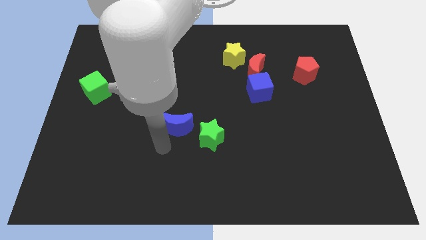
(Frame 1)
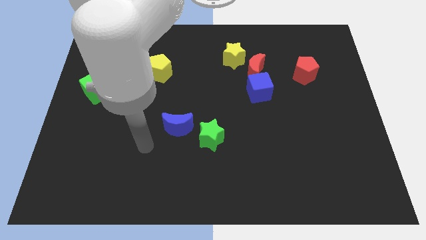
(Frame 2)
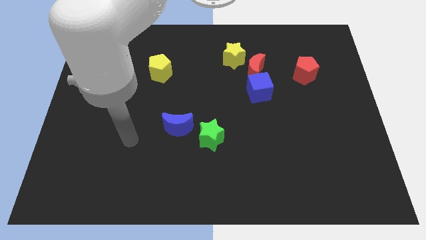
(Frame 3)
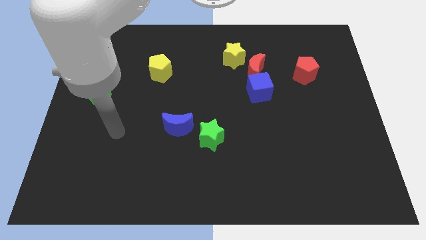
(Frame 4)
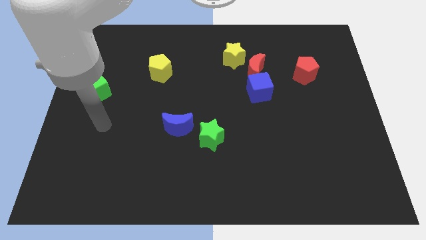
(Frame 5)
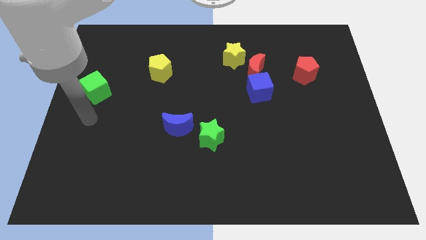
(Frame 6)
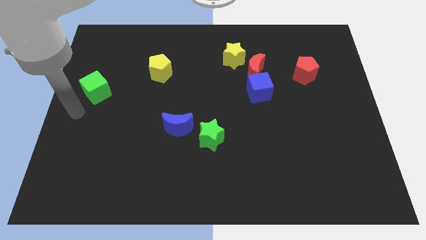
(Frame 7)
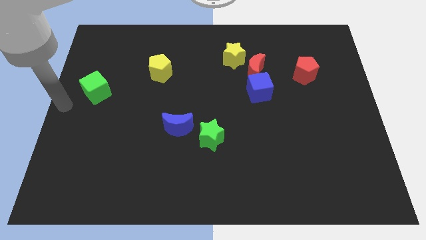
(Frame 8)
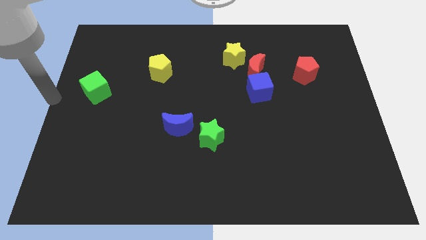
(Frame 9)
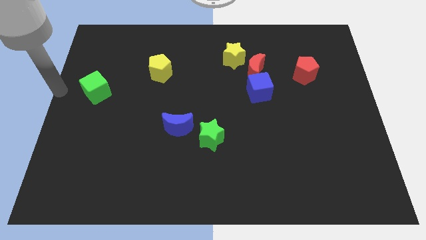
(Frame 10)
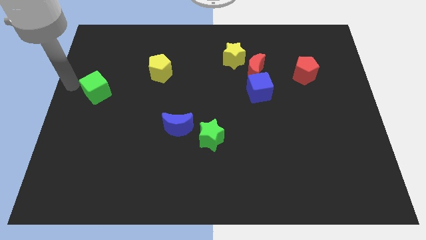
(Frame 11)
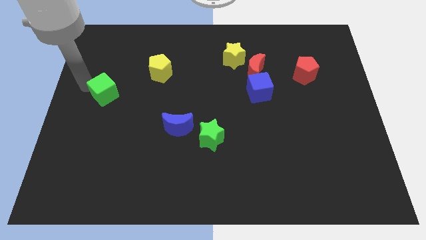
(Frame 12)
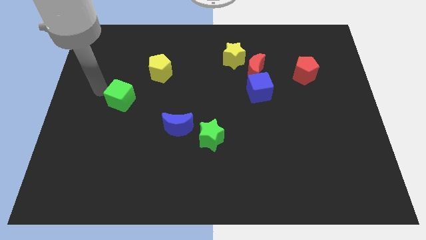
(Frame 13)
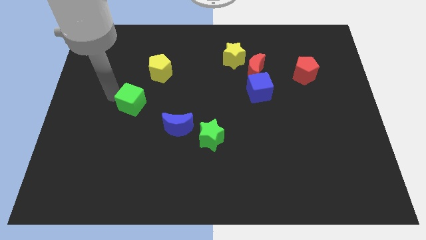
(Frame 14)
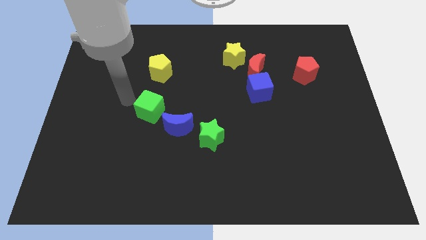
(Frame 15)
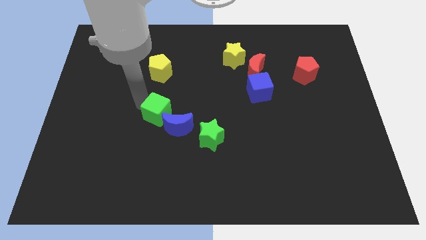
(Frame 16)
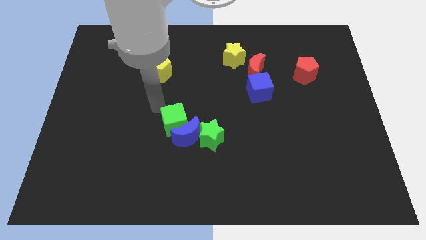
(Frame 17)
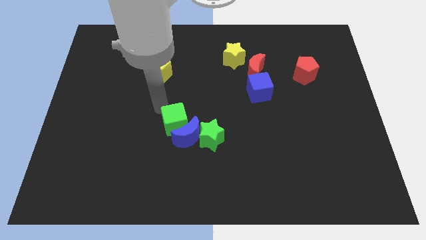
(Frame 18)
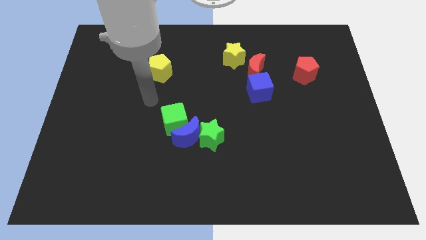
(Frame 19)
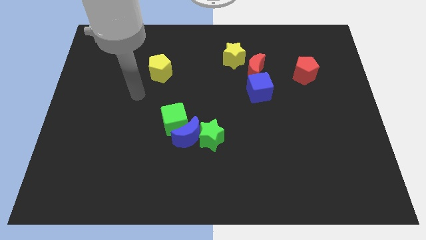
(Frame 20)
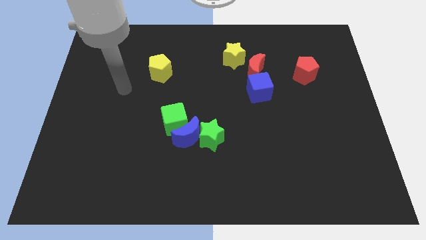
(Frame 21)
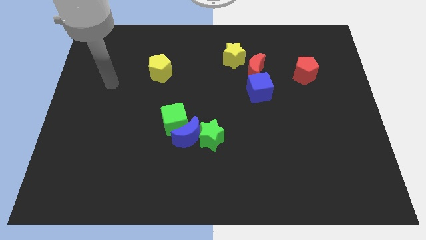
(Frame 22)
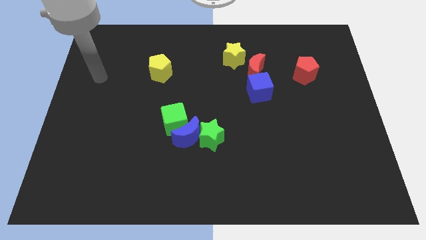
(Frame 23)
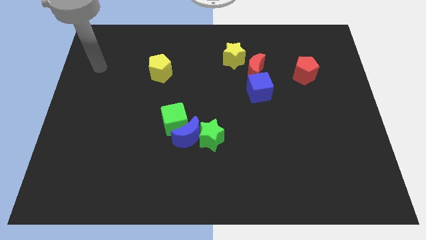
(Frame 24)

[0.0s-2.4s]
place the green cube left of the blue crescent

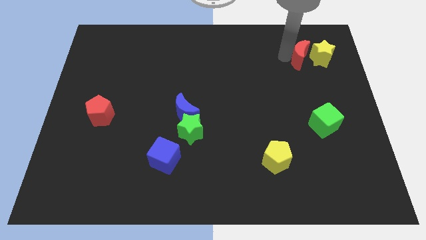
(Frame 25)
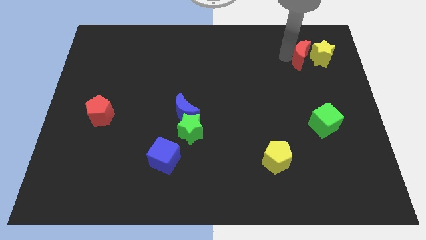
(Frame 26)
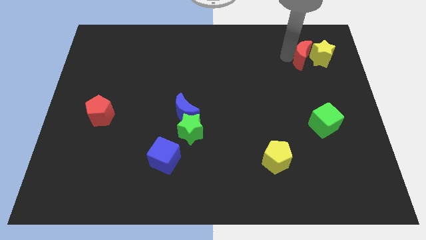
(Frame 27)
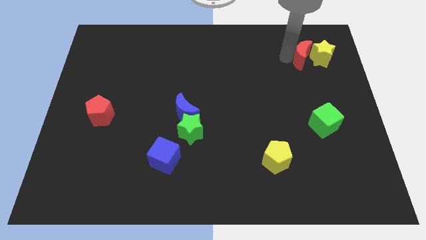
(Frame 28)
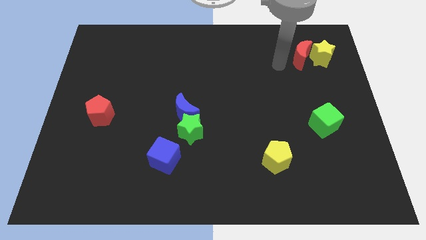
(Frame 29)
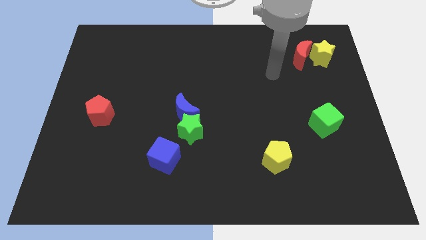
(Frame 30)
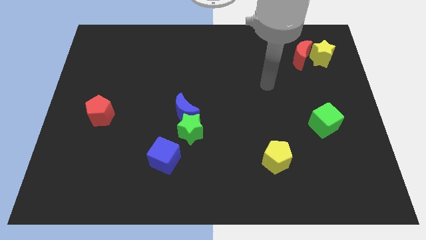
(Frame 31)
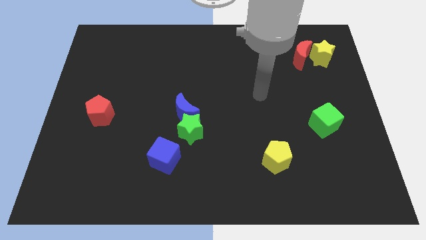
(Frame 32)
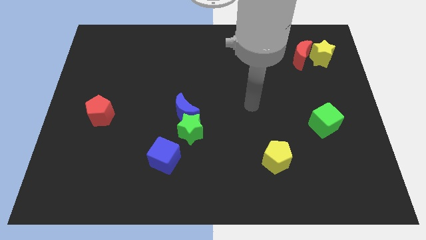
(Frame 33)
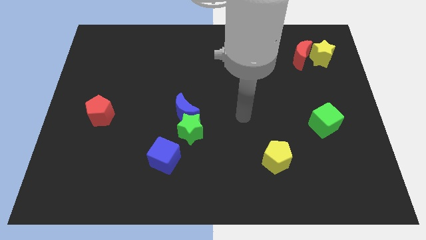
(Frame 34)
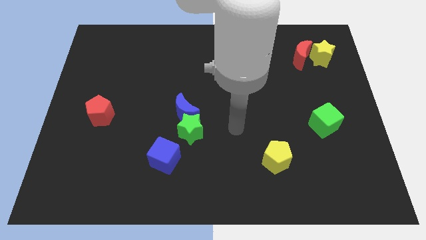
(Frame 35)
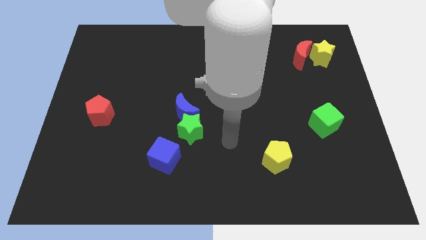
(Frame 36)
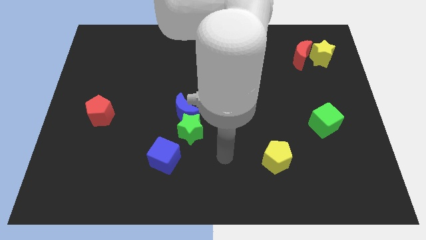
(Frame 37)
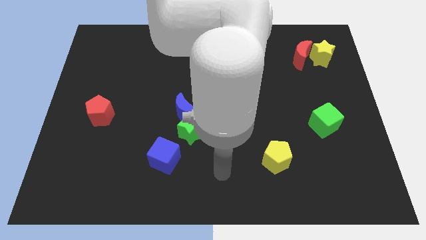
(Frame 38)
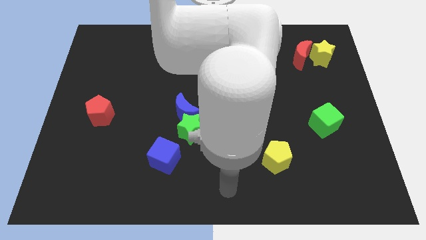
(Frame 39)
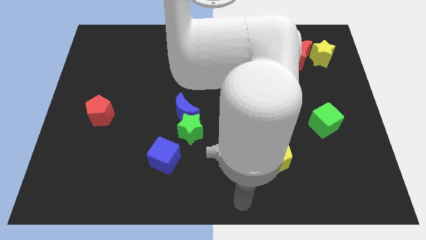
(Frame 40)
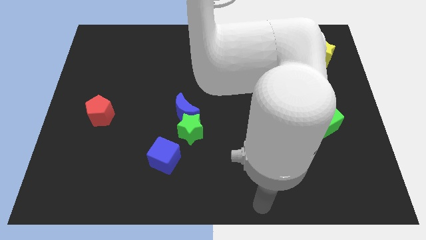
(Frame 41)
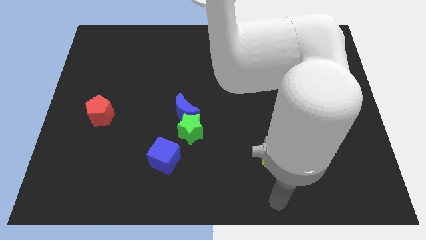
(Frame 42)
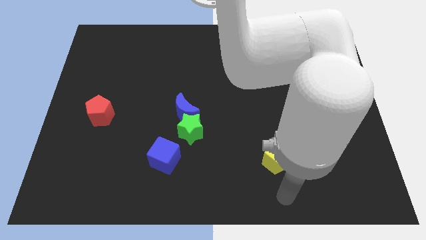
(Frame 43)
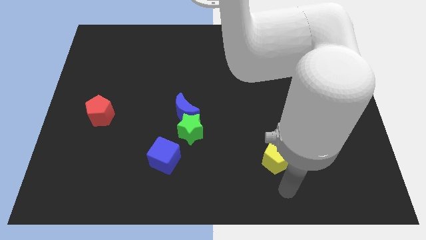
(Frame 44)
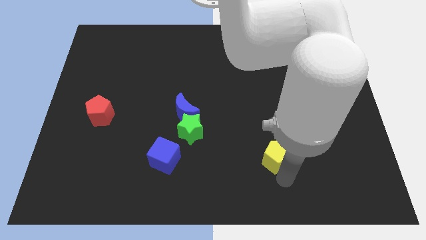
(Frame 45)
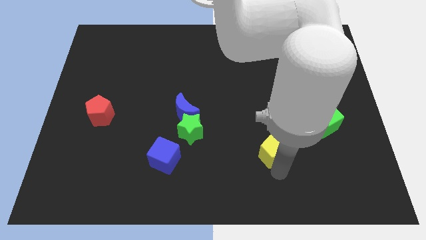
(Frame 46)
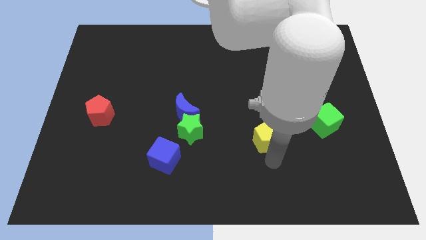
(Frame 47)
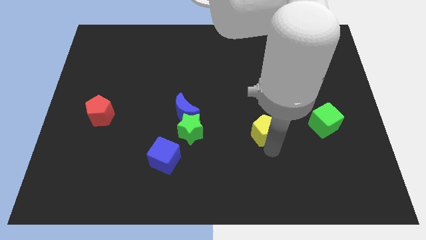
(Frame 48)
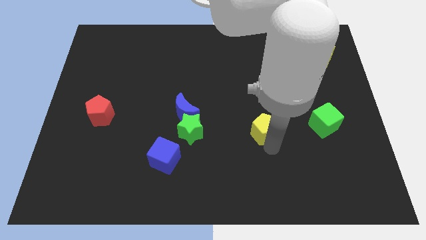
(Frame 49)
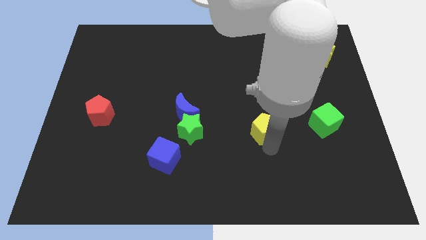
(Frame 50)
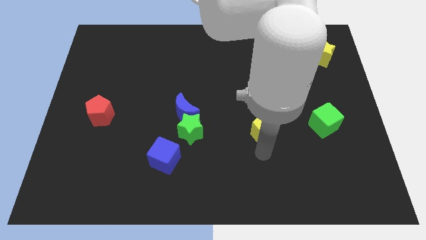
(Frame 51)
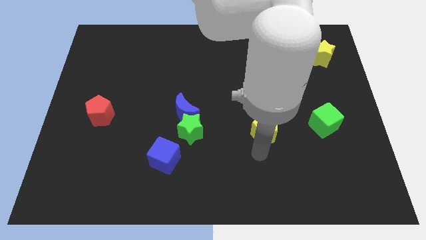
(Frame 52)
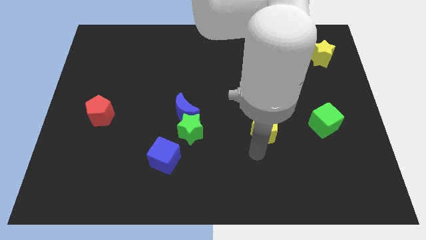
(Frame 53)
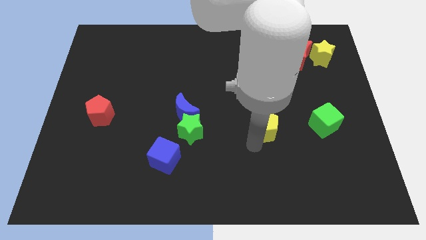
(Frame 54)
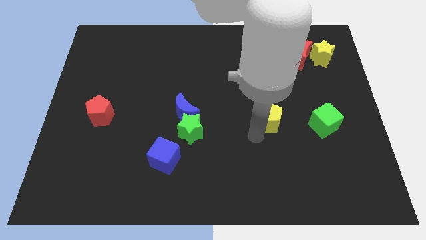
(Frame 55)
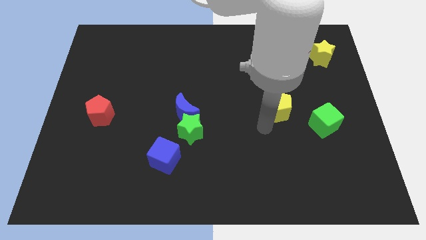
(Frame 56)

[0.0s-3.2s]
place the yellow pentagon in between the green star and green cube

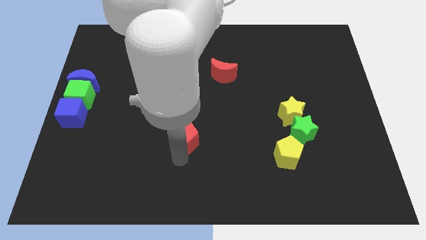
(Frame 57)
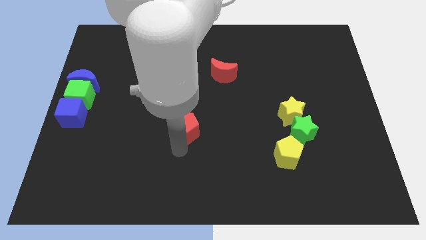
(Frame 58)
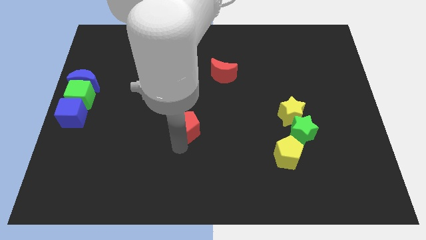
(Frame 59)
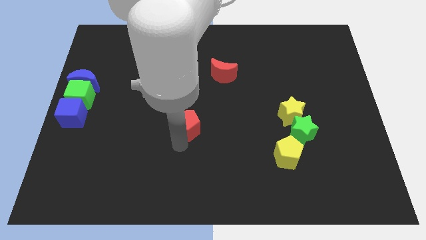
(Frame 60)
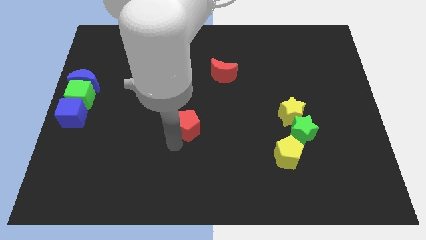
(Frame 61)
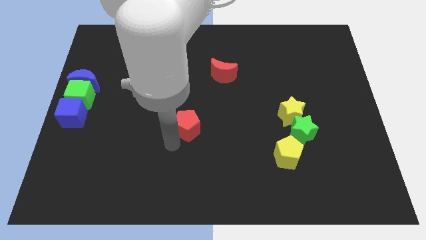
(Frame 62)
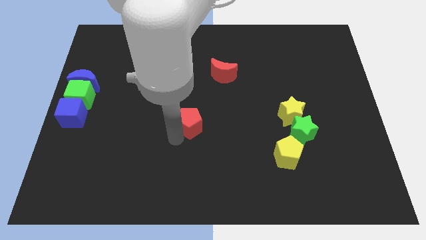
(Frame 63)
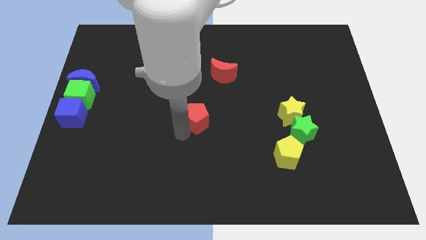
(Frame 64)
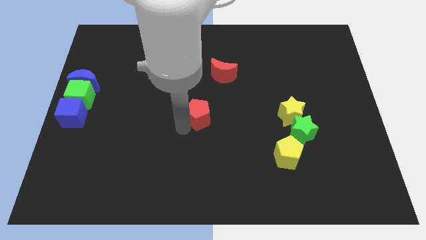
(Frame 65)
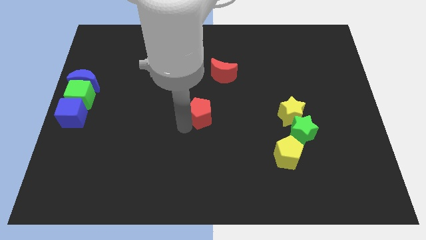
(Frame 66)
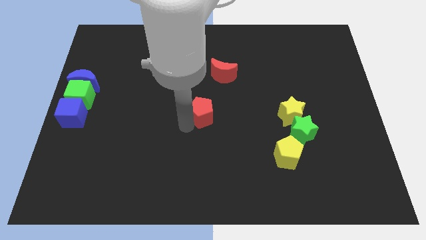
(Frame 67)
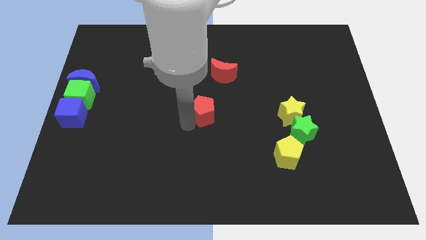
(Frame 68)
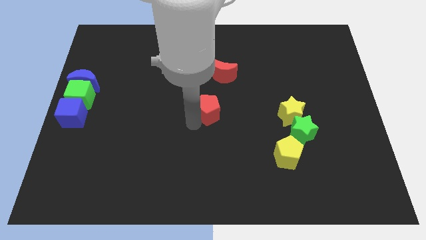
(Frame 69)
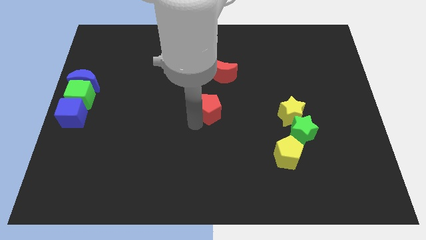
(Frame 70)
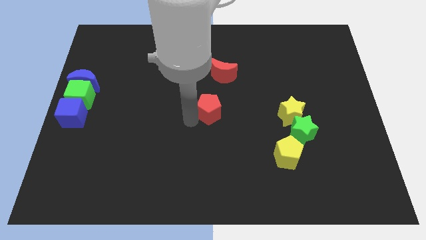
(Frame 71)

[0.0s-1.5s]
place the red pentagon below the red moon

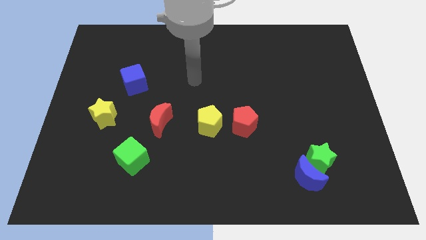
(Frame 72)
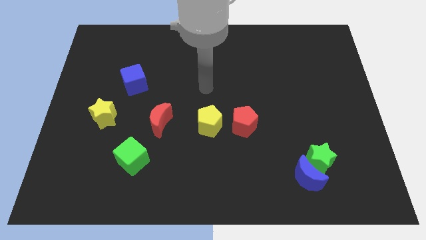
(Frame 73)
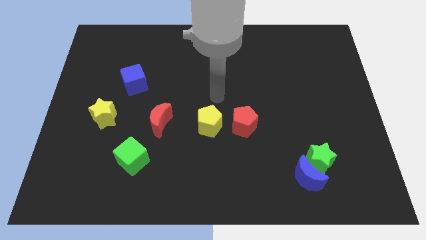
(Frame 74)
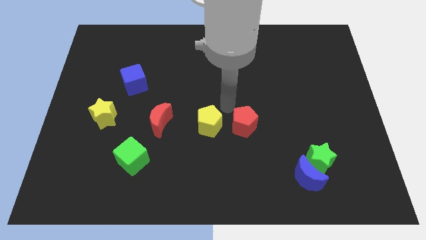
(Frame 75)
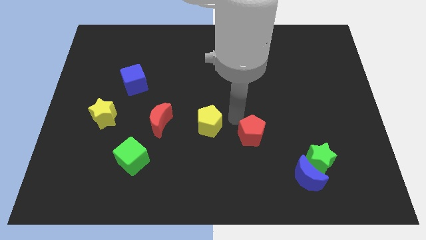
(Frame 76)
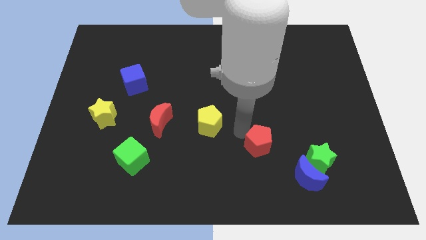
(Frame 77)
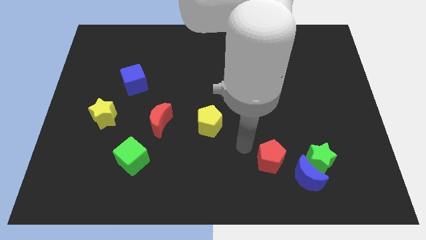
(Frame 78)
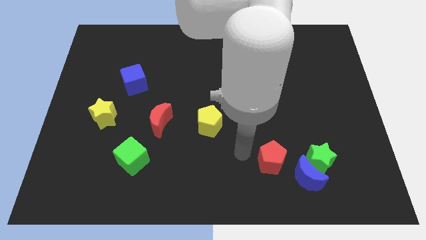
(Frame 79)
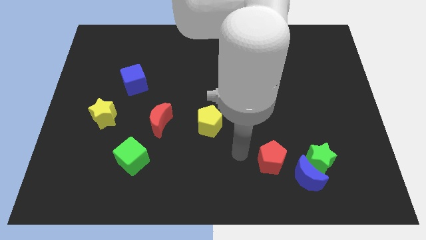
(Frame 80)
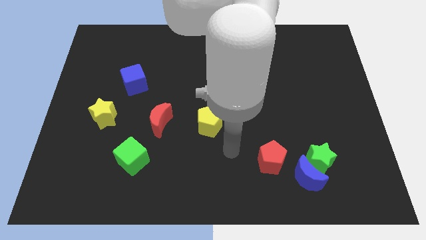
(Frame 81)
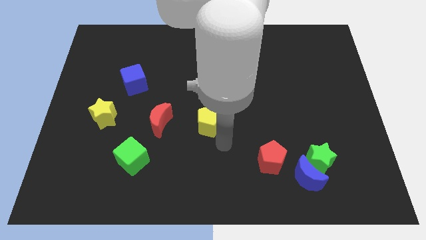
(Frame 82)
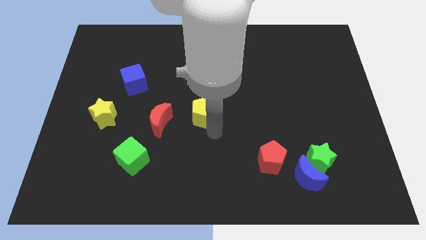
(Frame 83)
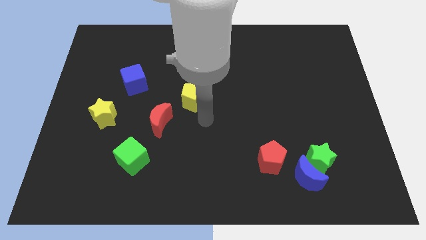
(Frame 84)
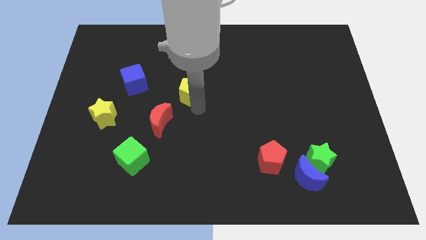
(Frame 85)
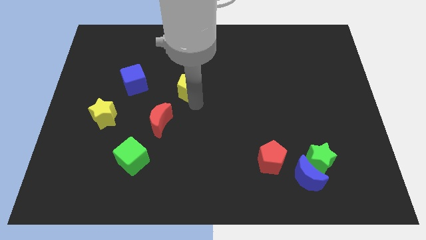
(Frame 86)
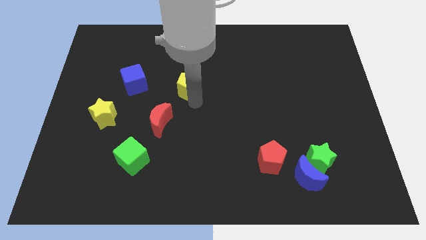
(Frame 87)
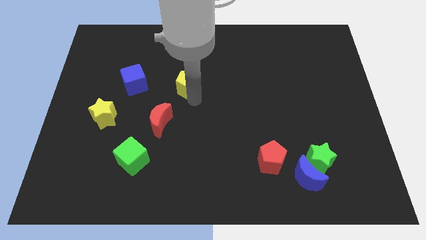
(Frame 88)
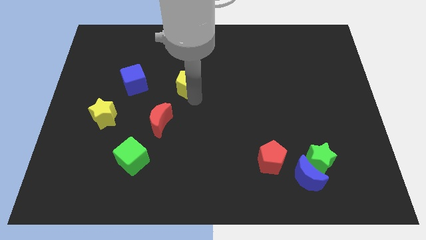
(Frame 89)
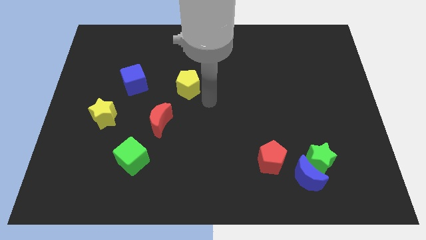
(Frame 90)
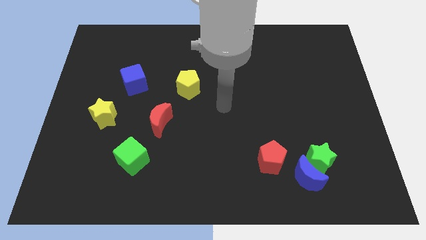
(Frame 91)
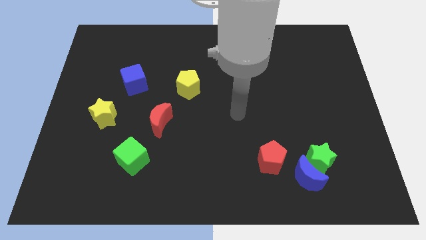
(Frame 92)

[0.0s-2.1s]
separate red pentagon and yellow pentagon from each other
